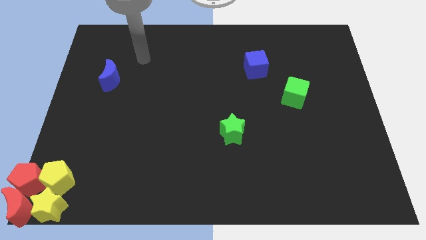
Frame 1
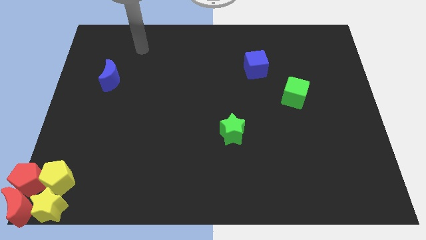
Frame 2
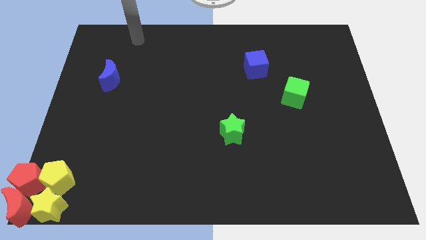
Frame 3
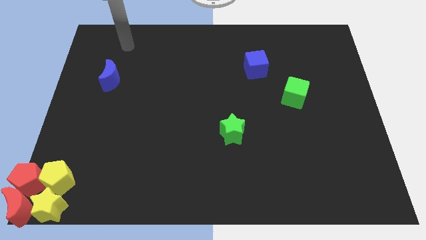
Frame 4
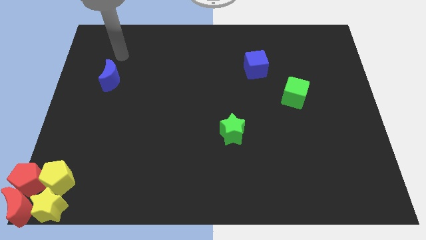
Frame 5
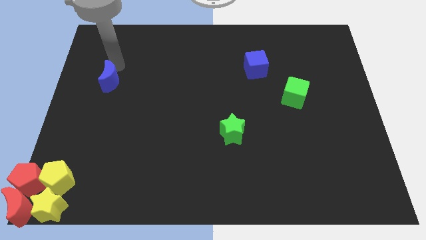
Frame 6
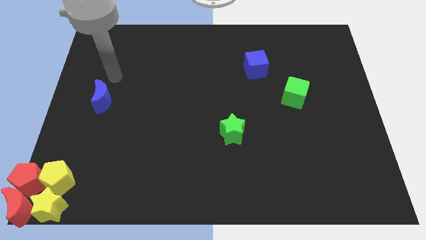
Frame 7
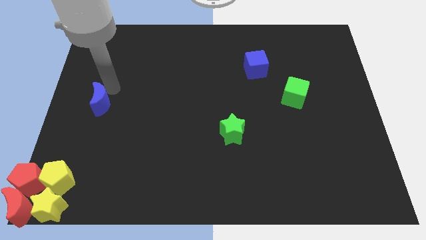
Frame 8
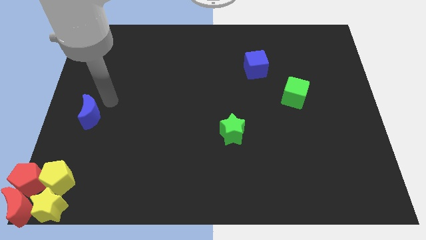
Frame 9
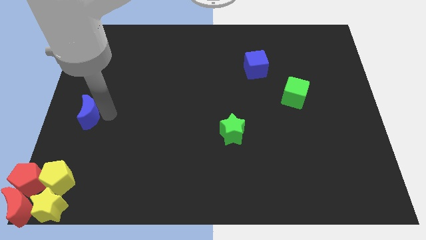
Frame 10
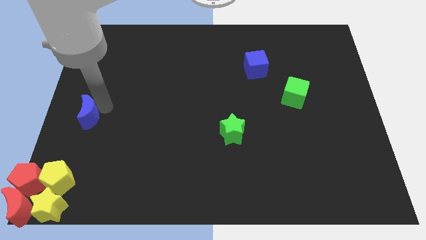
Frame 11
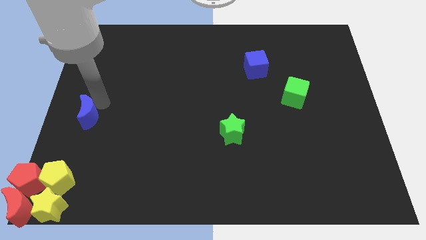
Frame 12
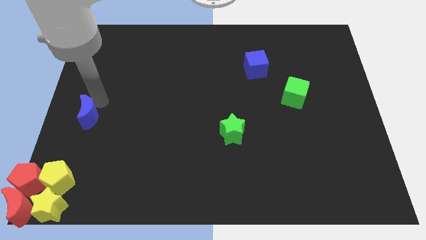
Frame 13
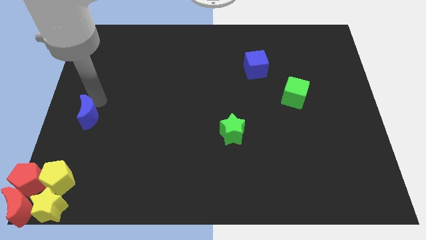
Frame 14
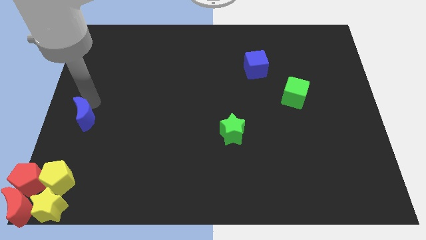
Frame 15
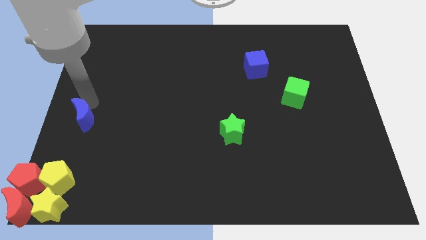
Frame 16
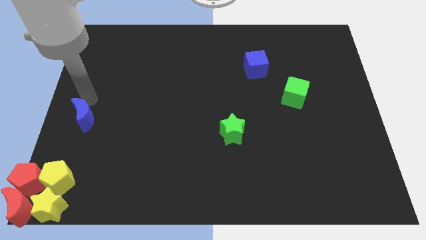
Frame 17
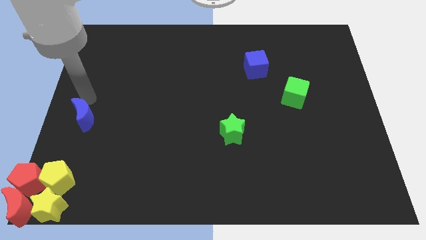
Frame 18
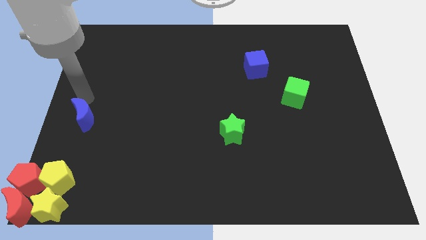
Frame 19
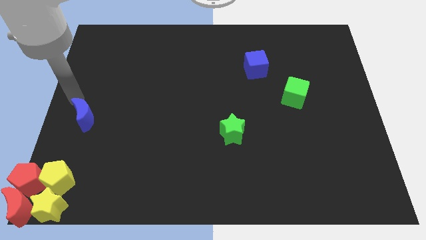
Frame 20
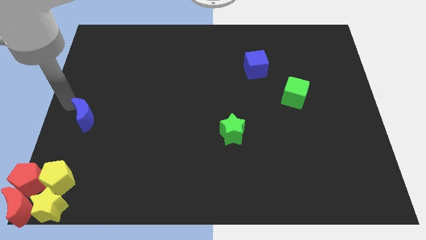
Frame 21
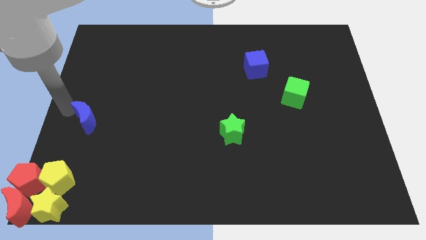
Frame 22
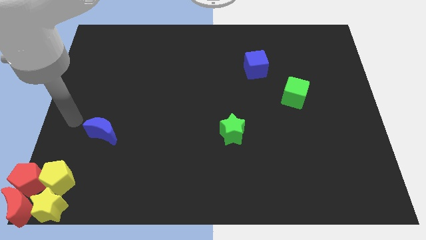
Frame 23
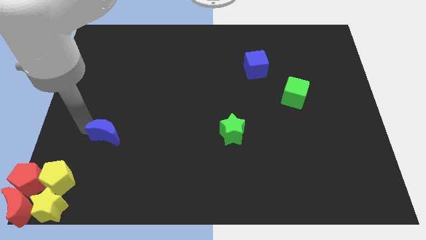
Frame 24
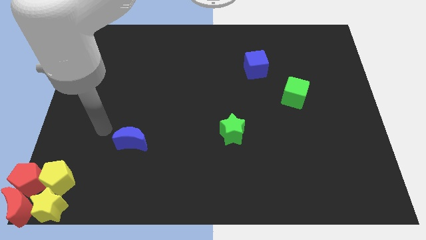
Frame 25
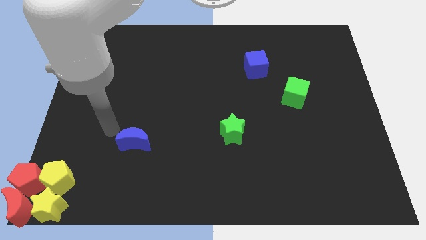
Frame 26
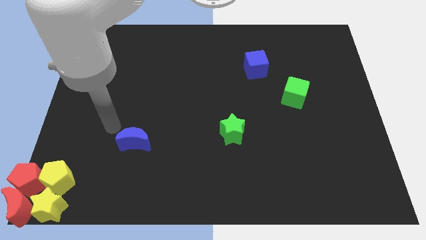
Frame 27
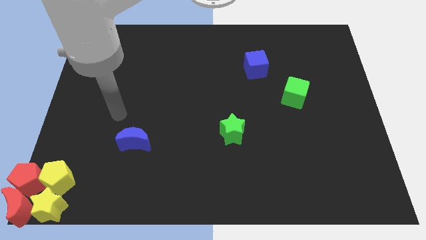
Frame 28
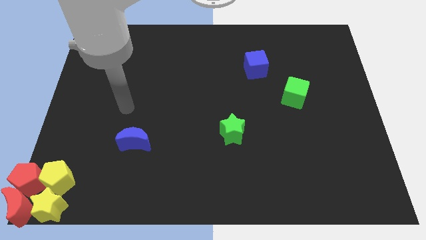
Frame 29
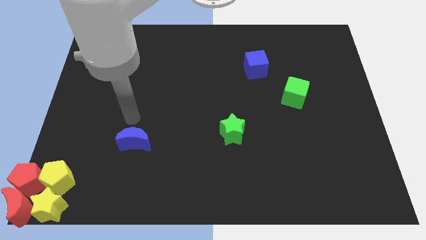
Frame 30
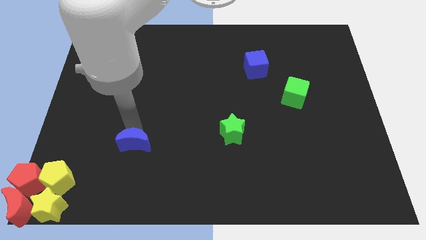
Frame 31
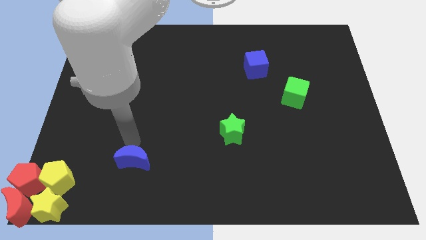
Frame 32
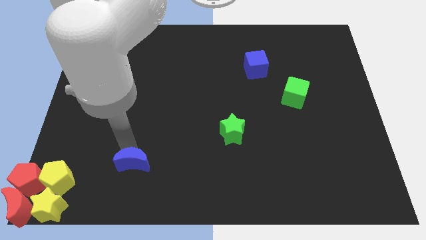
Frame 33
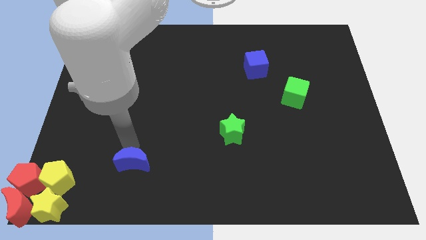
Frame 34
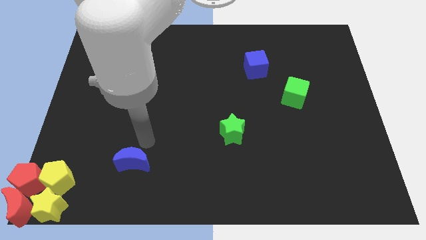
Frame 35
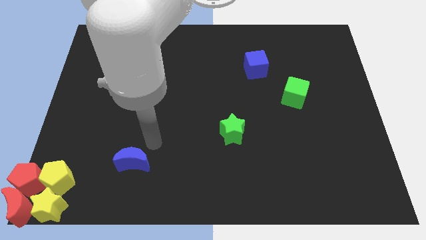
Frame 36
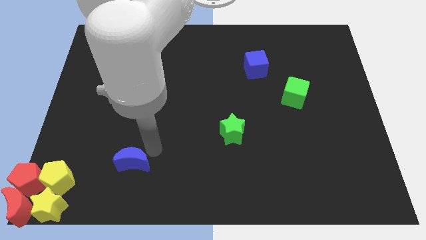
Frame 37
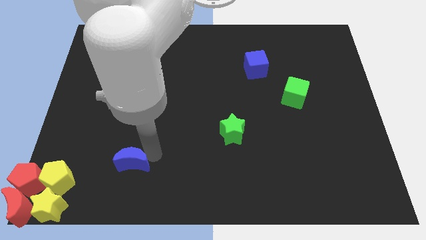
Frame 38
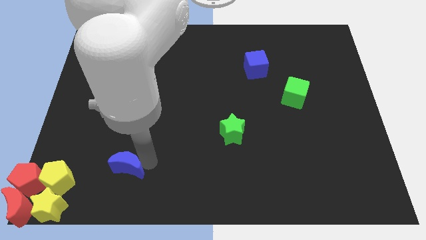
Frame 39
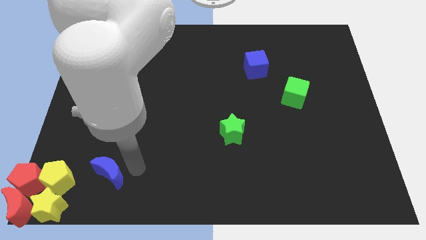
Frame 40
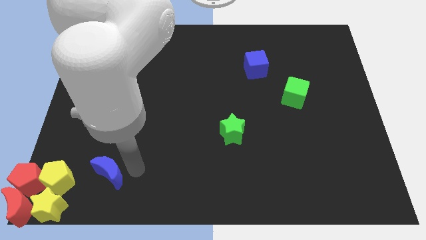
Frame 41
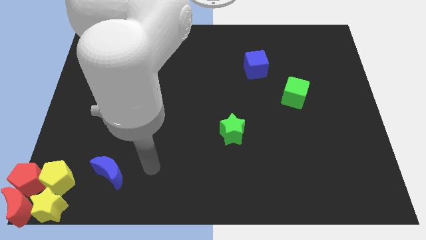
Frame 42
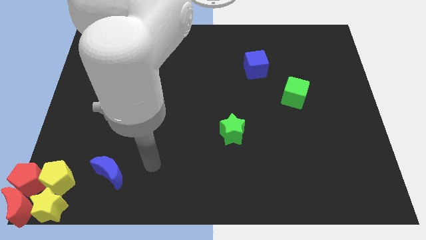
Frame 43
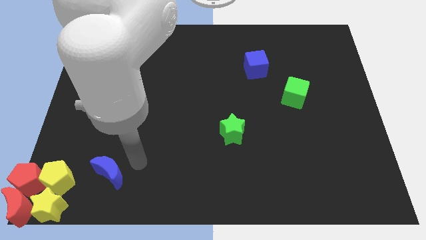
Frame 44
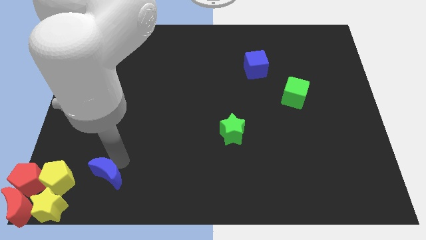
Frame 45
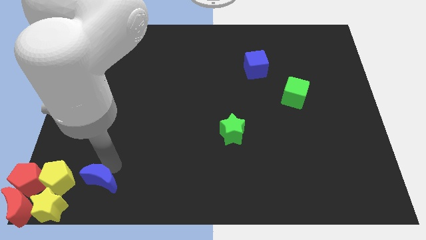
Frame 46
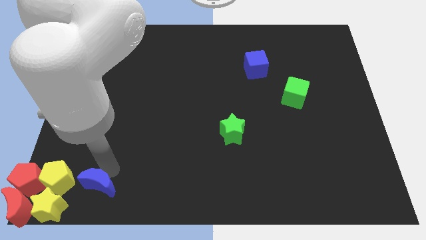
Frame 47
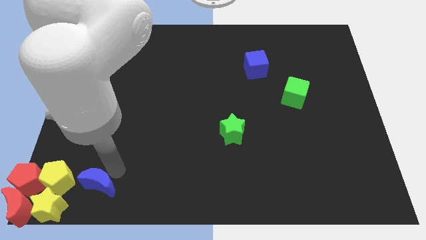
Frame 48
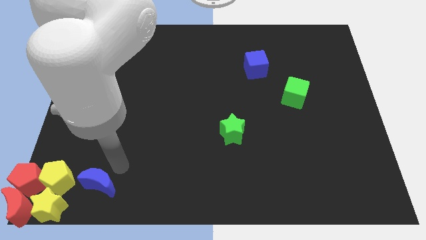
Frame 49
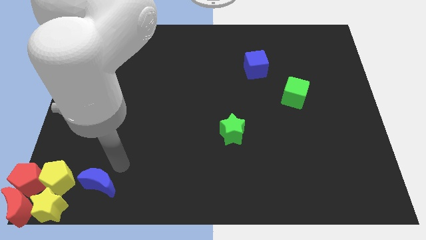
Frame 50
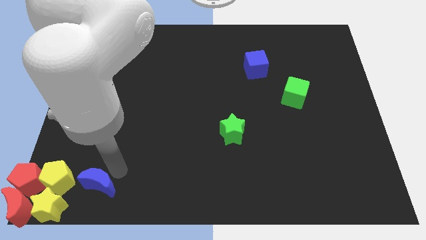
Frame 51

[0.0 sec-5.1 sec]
place blue moon to the right of yellow pentagon

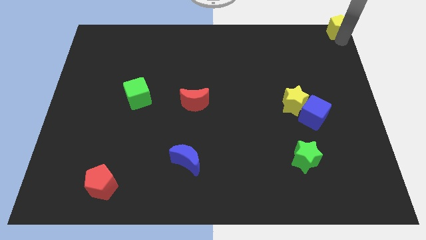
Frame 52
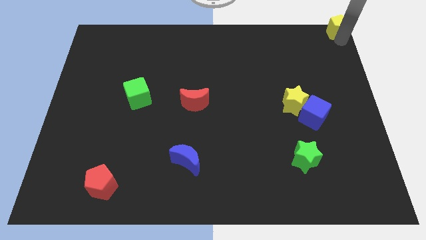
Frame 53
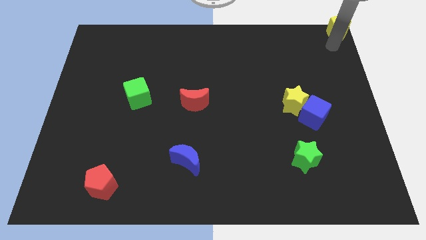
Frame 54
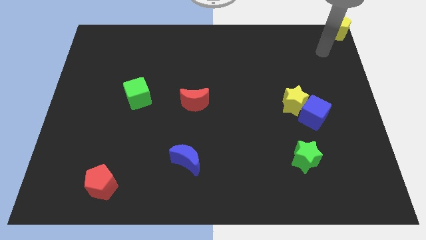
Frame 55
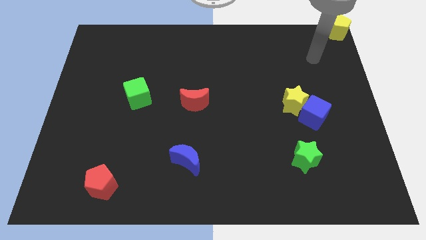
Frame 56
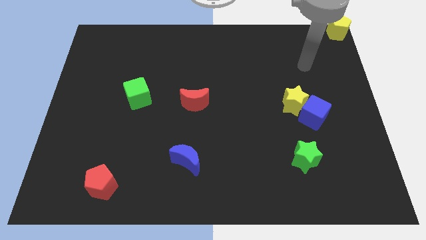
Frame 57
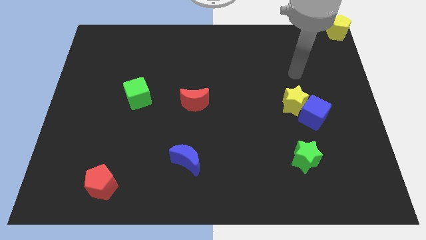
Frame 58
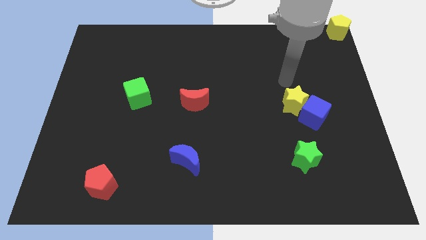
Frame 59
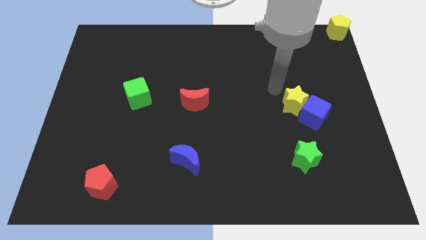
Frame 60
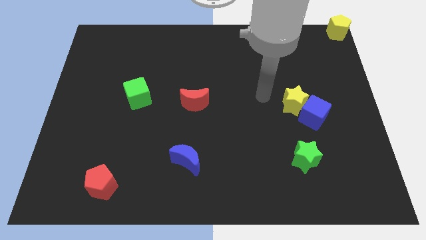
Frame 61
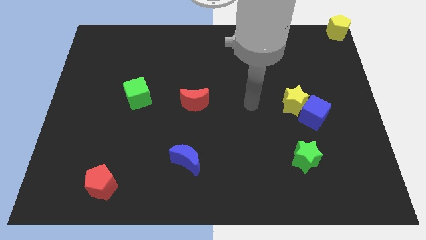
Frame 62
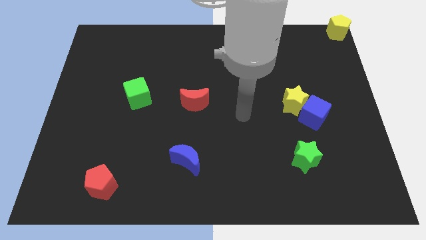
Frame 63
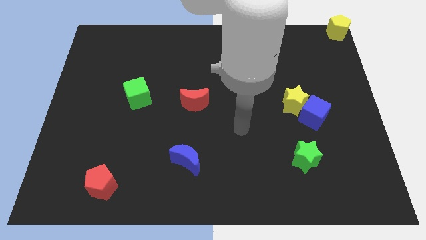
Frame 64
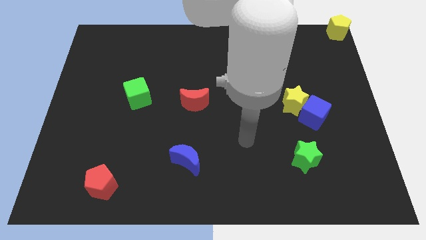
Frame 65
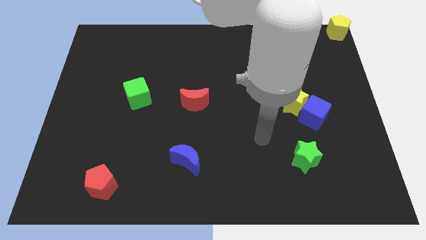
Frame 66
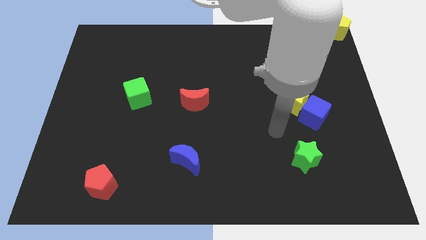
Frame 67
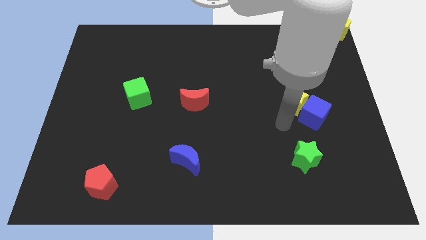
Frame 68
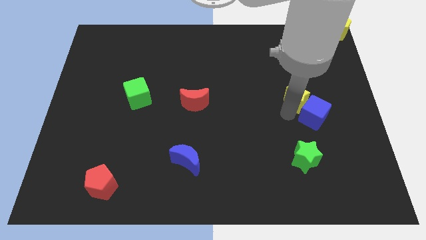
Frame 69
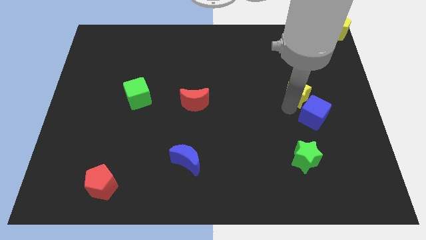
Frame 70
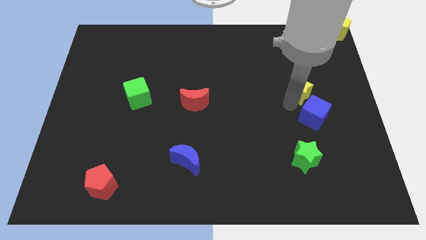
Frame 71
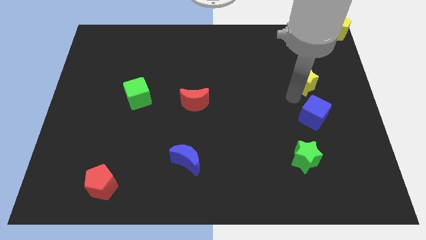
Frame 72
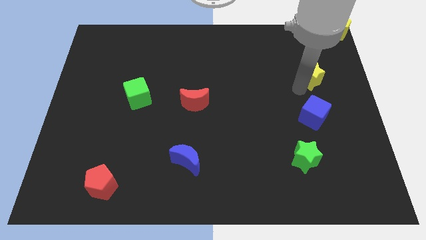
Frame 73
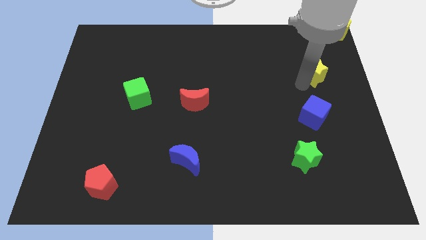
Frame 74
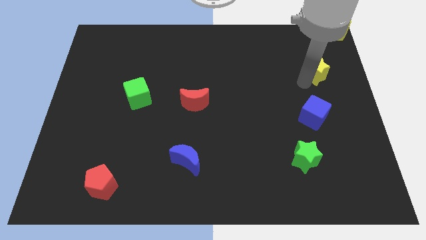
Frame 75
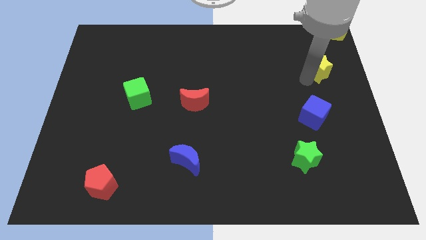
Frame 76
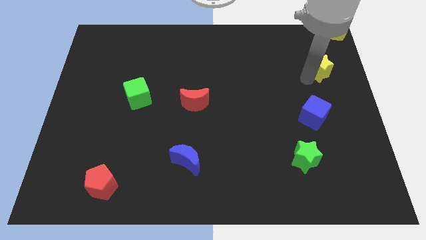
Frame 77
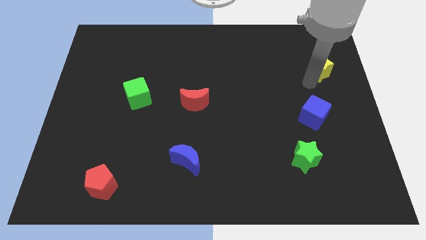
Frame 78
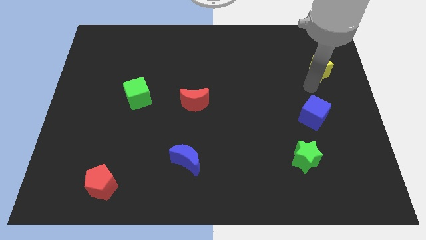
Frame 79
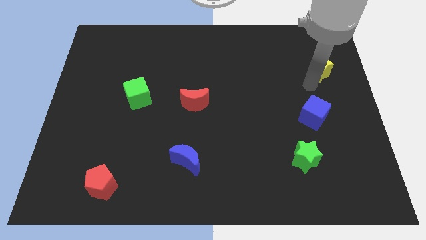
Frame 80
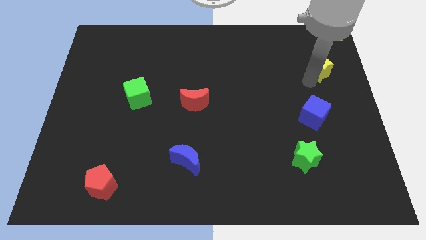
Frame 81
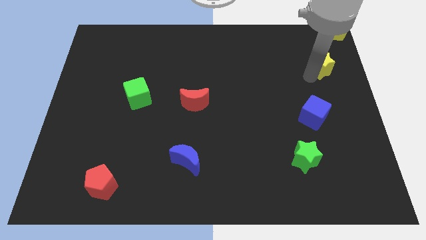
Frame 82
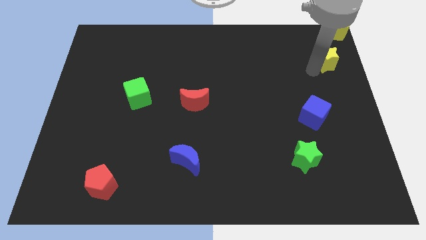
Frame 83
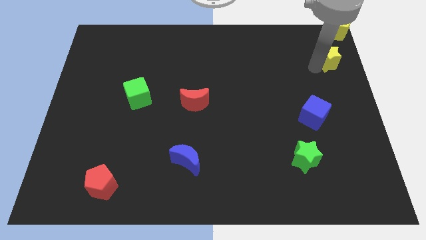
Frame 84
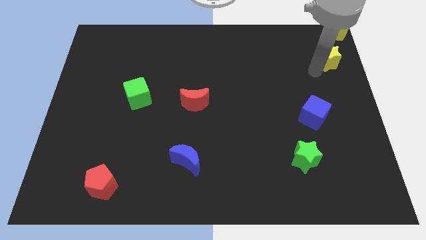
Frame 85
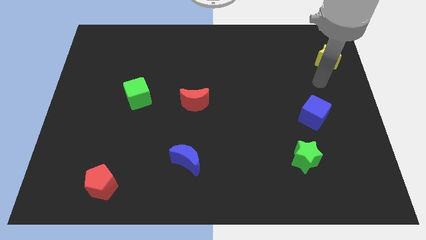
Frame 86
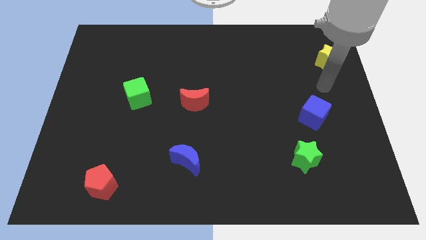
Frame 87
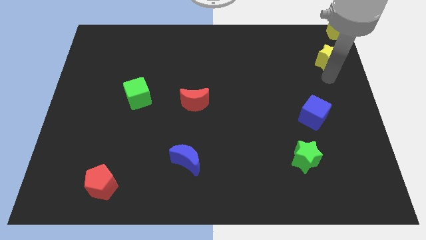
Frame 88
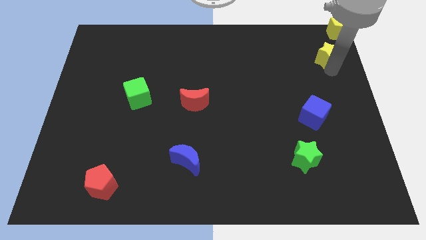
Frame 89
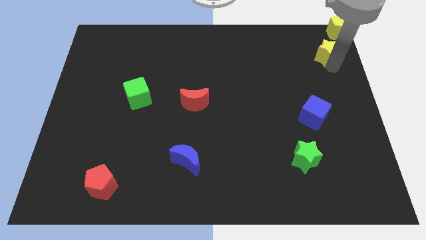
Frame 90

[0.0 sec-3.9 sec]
place the yellow star between yellow pentgaon and blue cube
